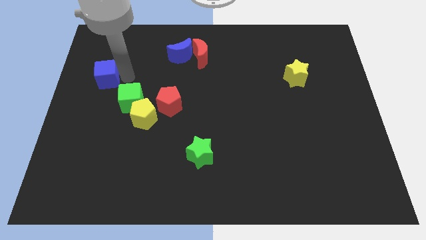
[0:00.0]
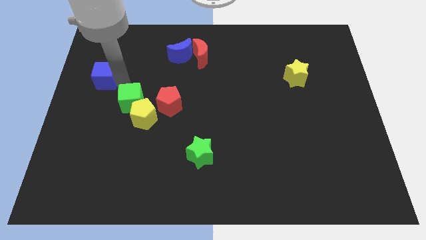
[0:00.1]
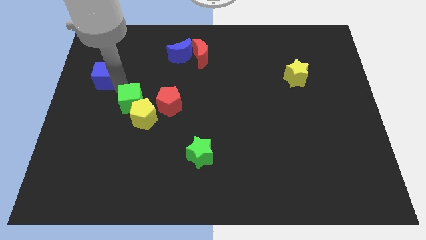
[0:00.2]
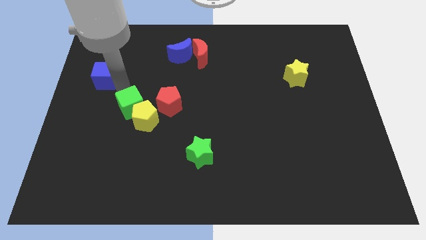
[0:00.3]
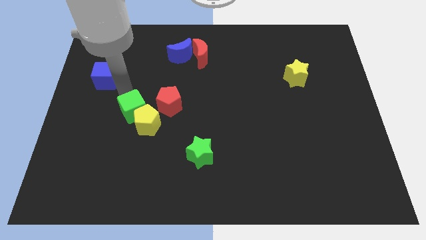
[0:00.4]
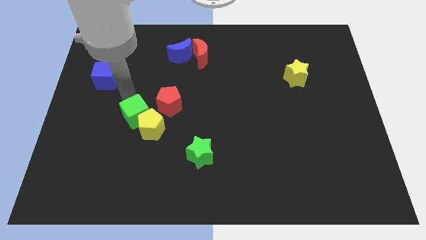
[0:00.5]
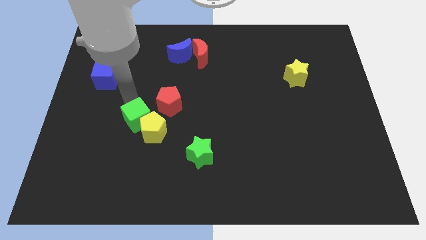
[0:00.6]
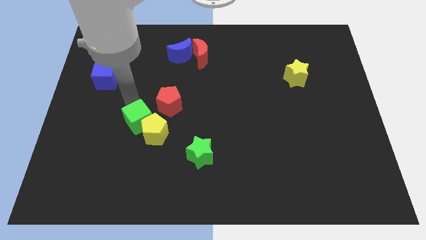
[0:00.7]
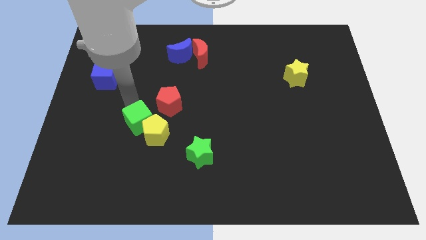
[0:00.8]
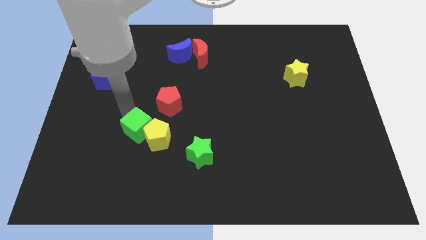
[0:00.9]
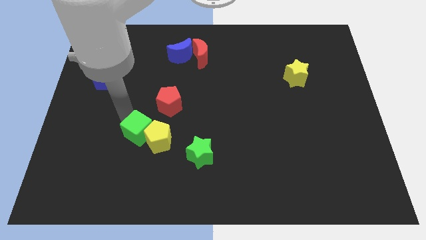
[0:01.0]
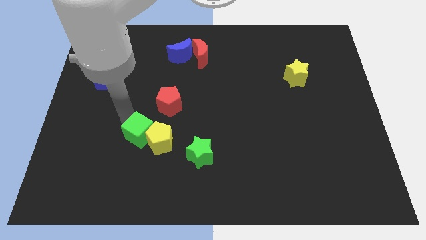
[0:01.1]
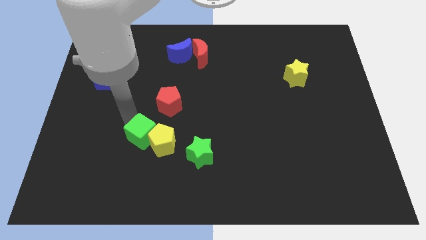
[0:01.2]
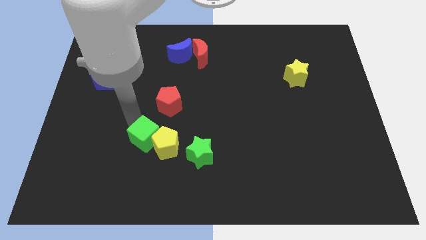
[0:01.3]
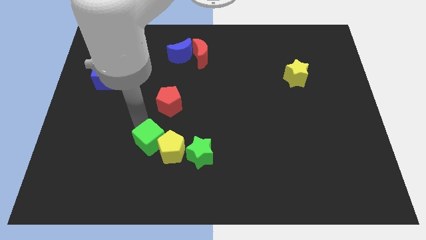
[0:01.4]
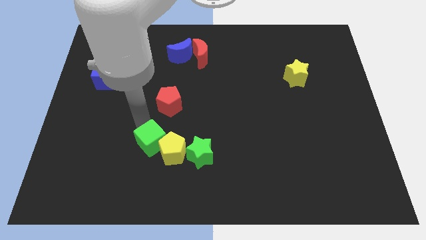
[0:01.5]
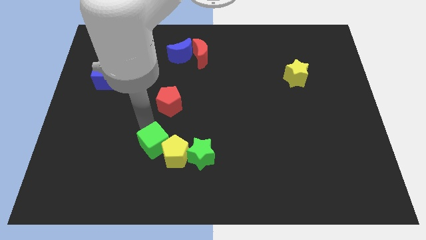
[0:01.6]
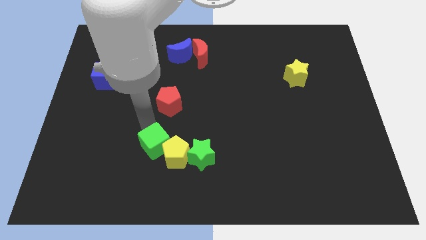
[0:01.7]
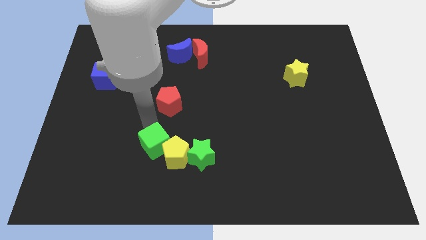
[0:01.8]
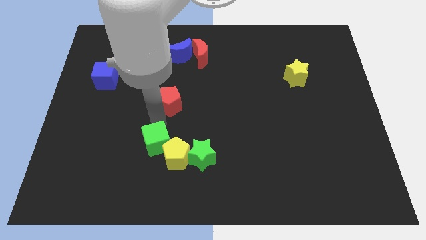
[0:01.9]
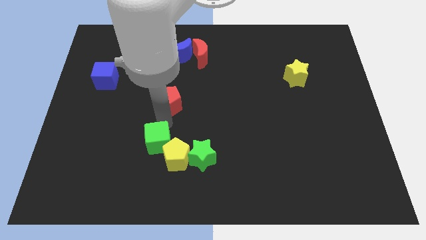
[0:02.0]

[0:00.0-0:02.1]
push green cube and yellow pentagon close to the green star

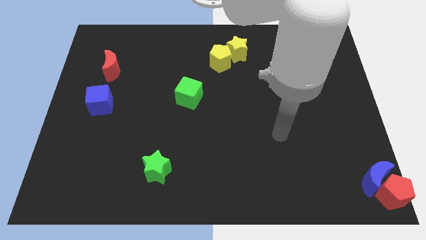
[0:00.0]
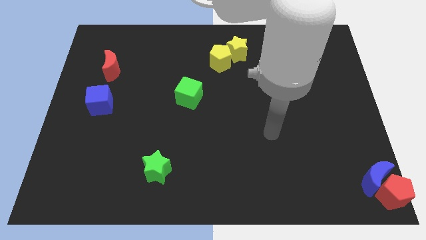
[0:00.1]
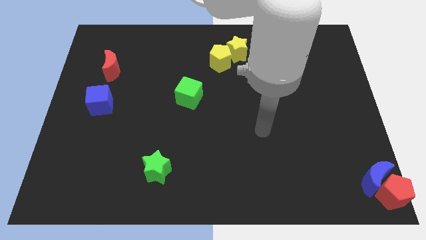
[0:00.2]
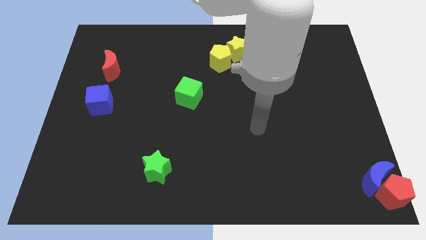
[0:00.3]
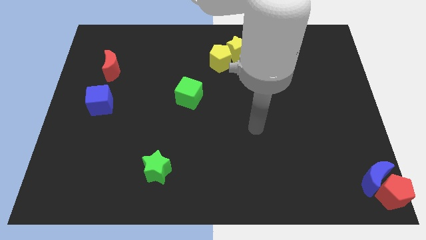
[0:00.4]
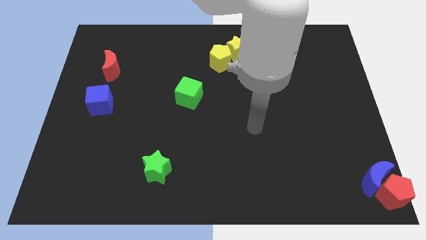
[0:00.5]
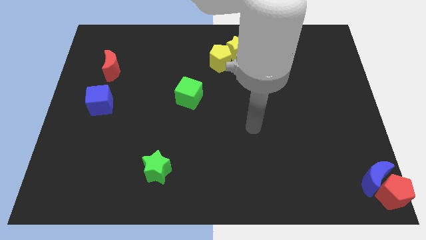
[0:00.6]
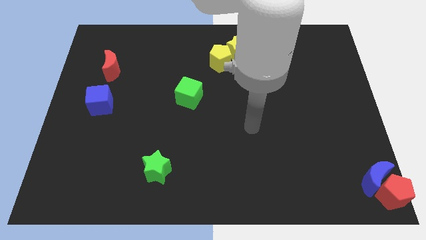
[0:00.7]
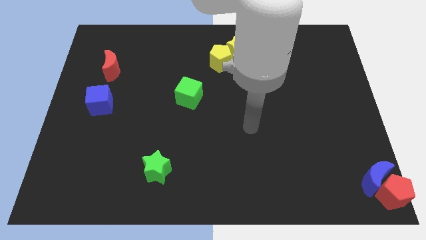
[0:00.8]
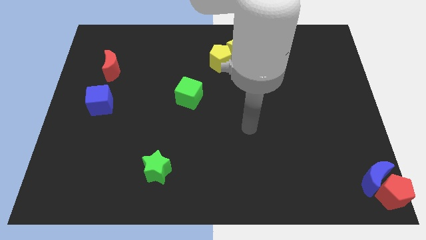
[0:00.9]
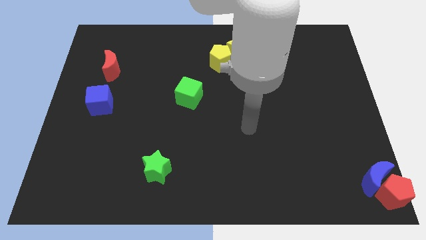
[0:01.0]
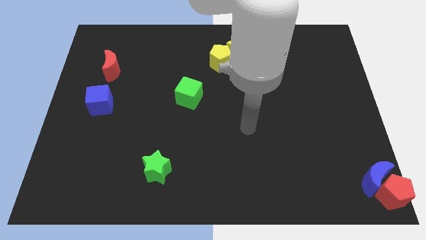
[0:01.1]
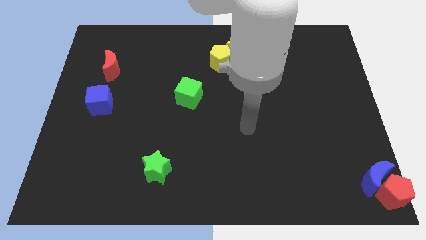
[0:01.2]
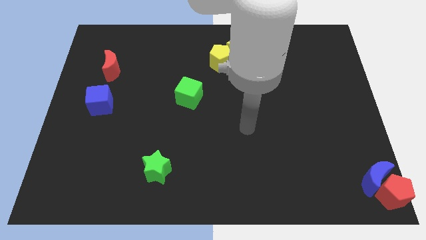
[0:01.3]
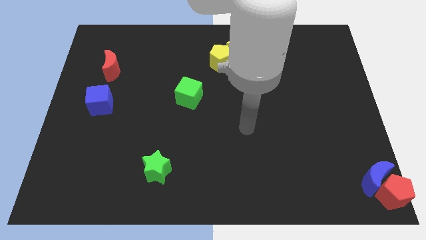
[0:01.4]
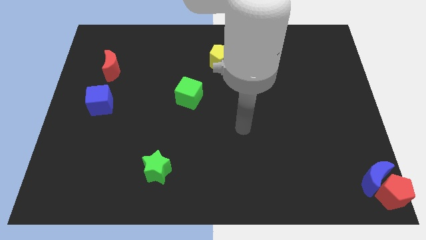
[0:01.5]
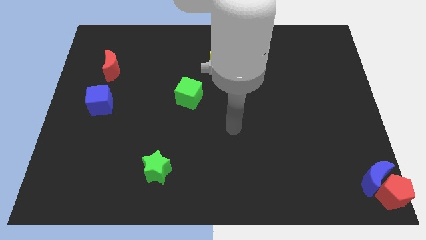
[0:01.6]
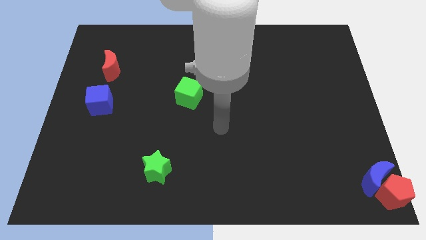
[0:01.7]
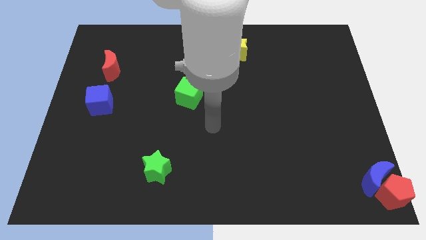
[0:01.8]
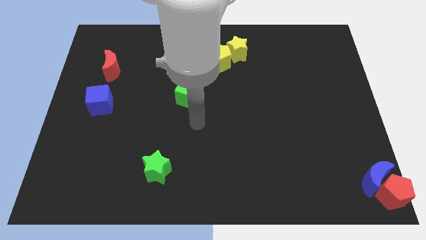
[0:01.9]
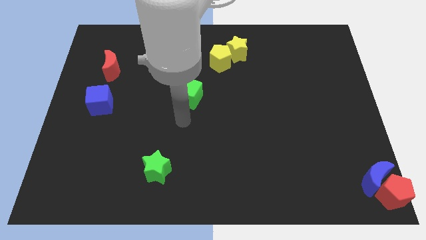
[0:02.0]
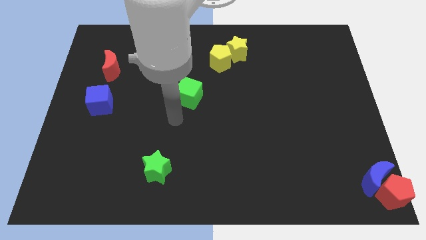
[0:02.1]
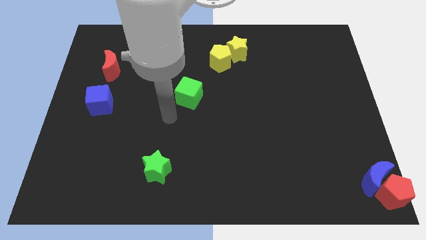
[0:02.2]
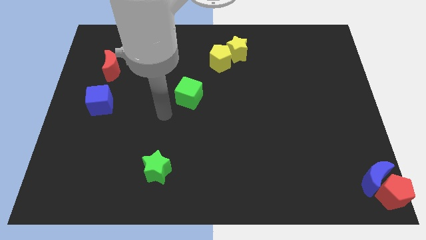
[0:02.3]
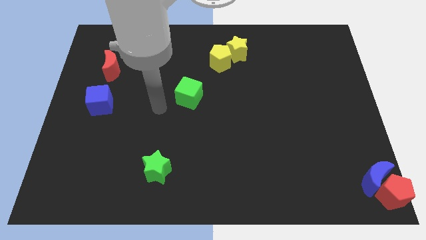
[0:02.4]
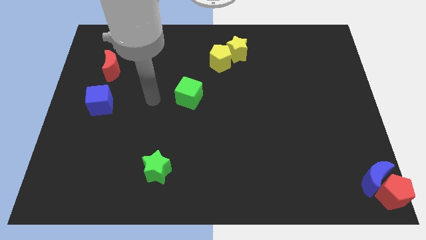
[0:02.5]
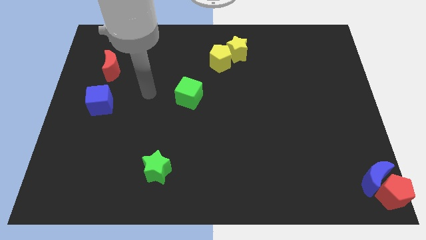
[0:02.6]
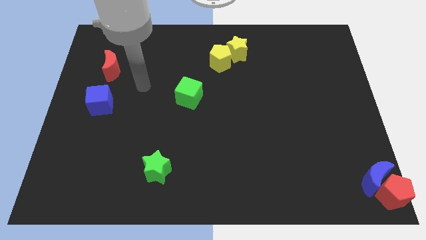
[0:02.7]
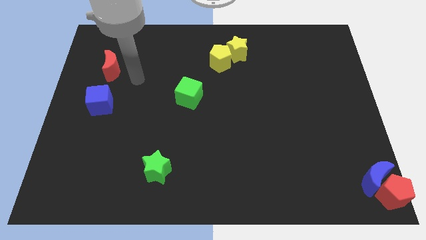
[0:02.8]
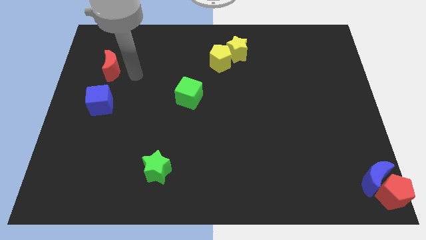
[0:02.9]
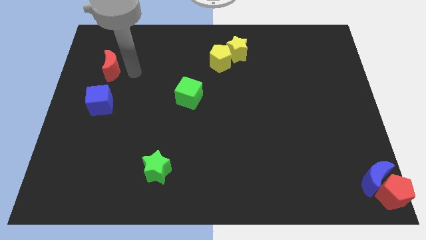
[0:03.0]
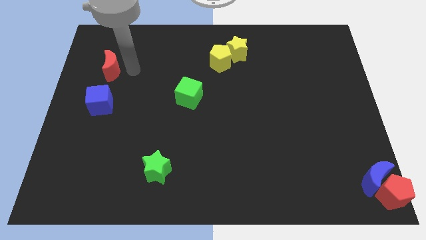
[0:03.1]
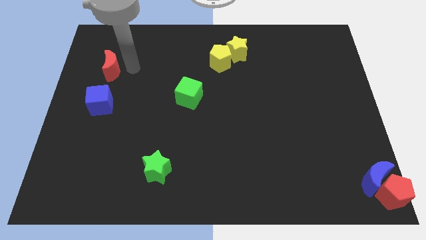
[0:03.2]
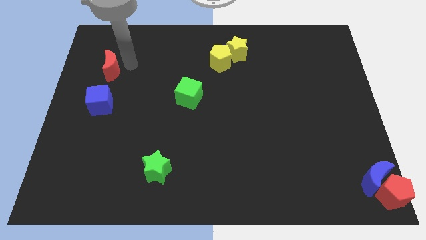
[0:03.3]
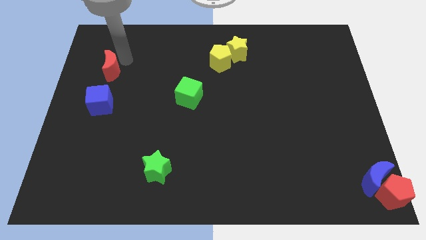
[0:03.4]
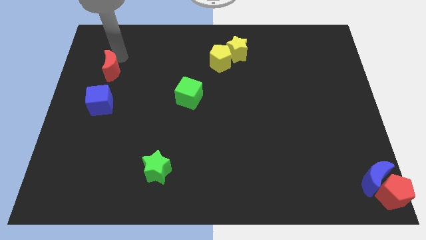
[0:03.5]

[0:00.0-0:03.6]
move near to the red moon

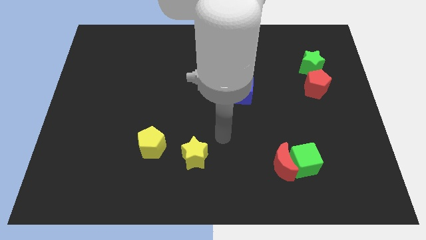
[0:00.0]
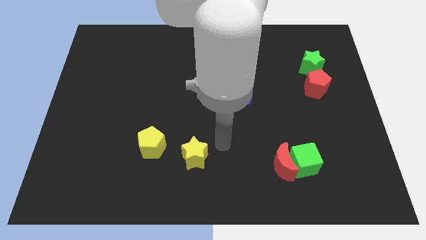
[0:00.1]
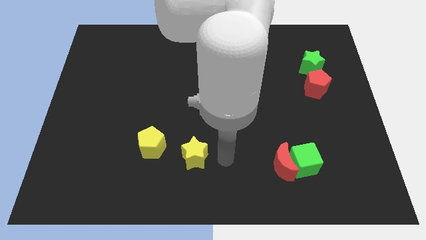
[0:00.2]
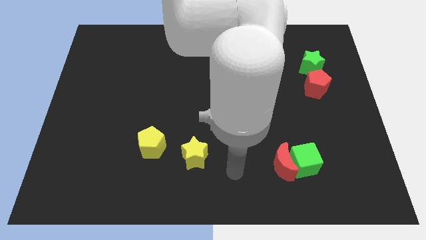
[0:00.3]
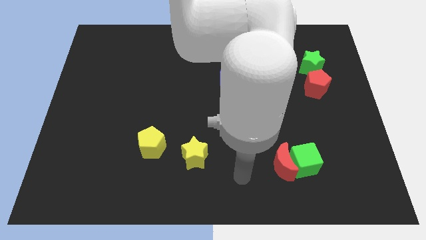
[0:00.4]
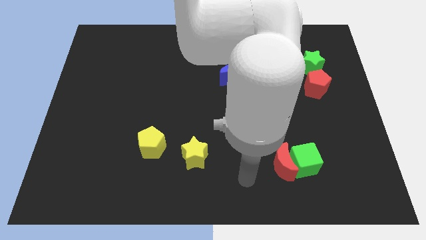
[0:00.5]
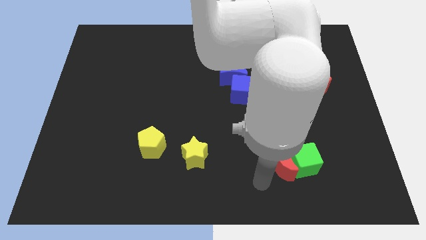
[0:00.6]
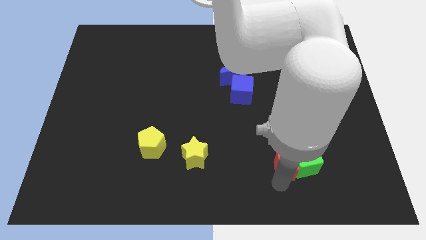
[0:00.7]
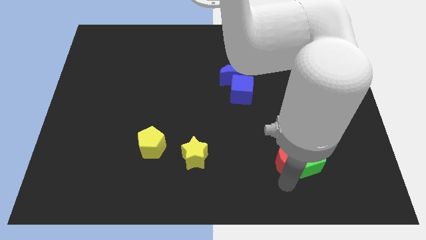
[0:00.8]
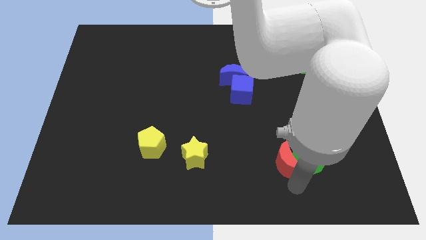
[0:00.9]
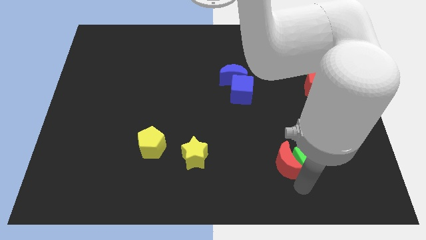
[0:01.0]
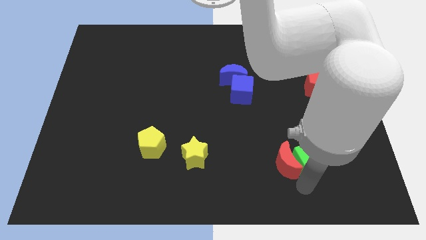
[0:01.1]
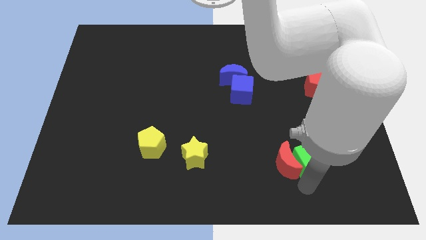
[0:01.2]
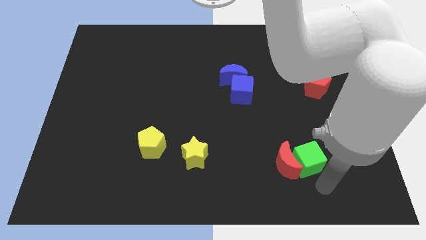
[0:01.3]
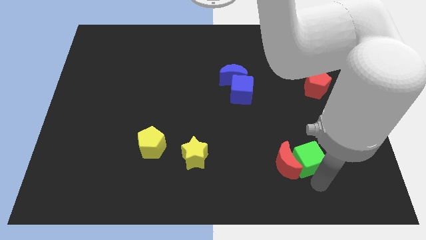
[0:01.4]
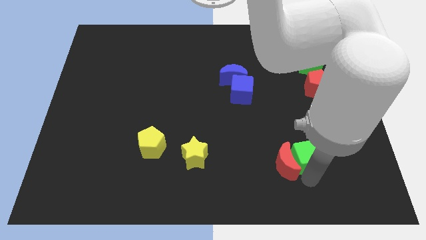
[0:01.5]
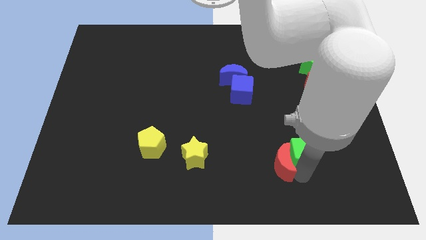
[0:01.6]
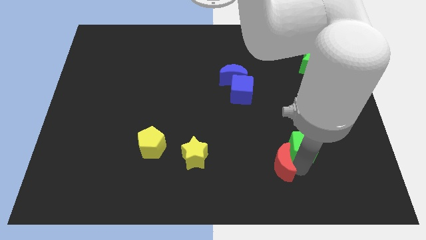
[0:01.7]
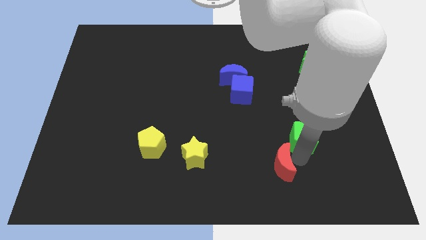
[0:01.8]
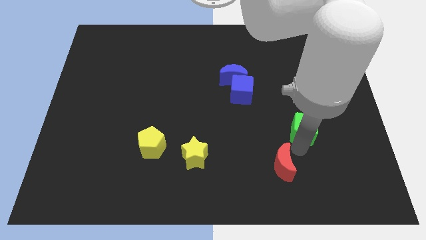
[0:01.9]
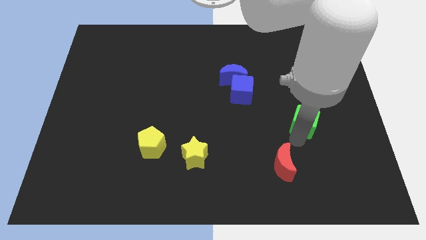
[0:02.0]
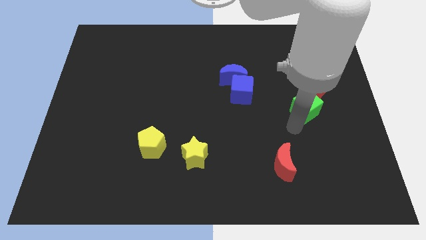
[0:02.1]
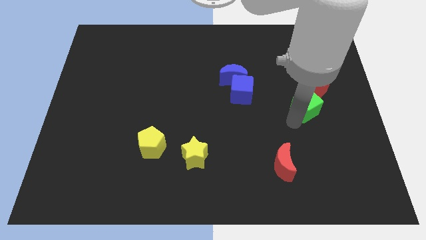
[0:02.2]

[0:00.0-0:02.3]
separate the red crescent and the green cube

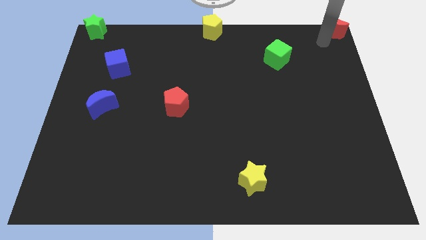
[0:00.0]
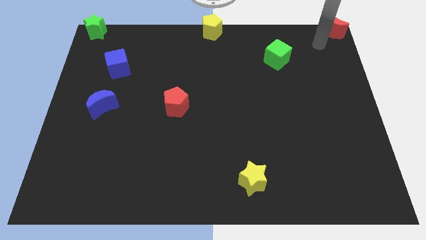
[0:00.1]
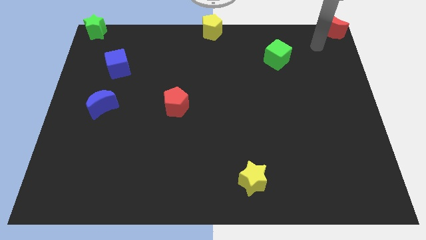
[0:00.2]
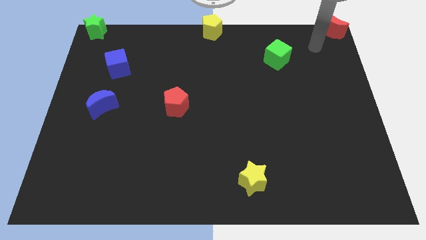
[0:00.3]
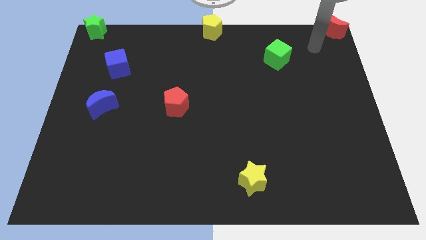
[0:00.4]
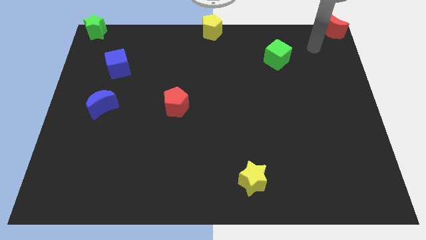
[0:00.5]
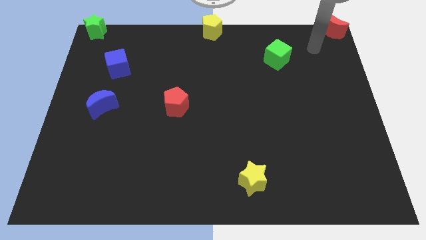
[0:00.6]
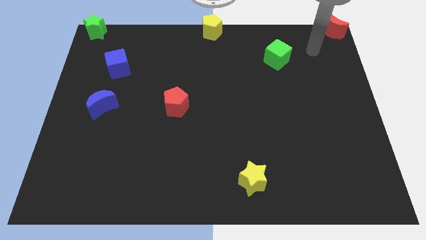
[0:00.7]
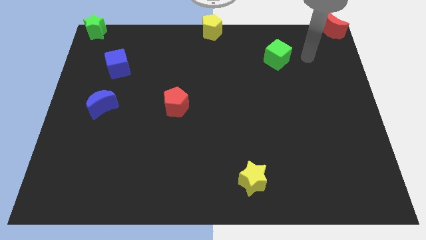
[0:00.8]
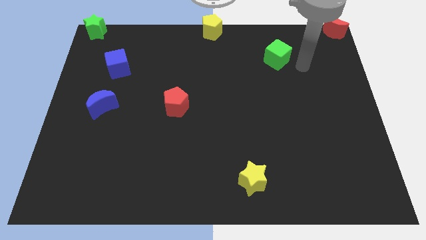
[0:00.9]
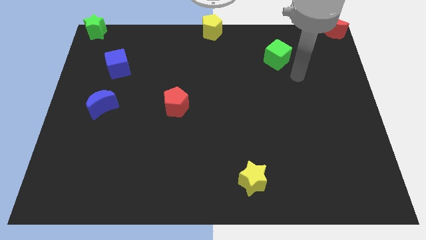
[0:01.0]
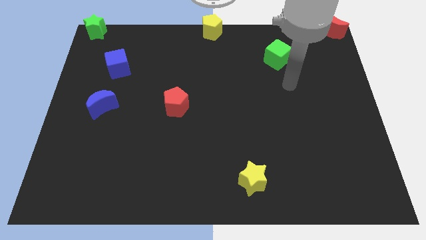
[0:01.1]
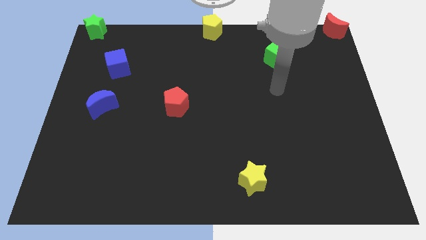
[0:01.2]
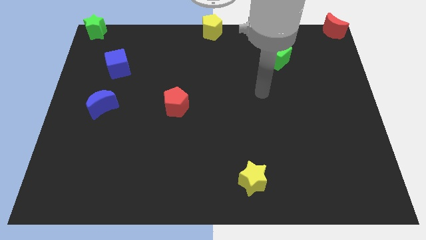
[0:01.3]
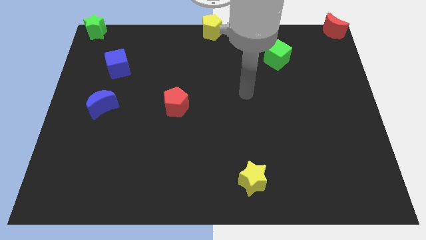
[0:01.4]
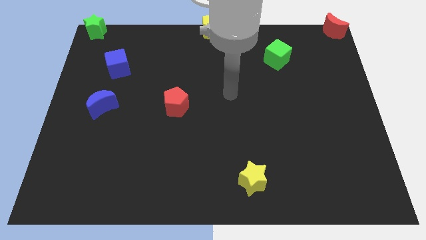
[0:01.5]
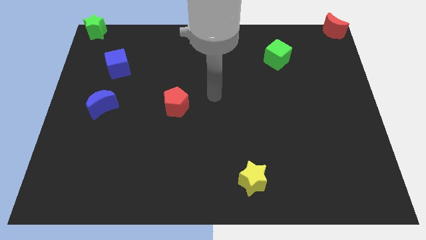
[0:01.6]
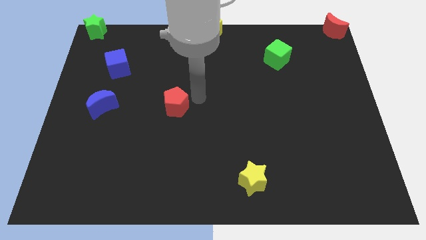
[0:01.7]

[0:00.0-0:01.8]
move the arm to the left of the red pentagon
